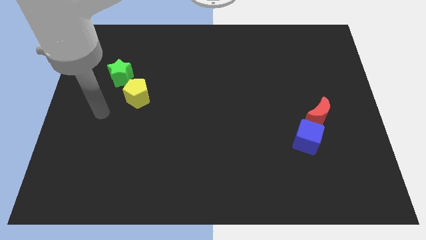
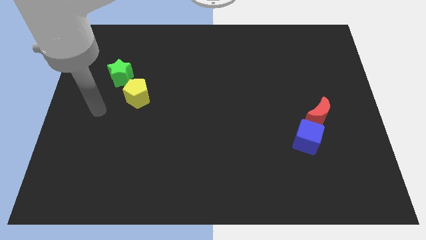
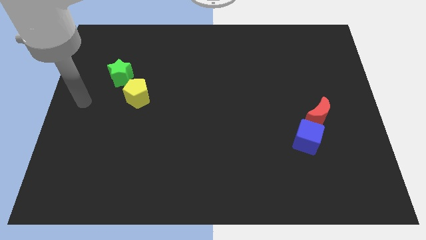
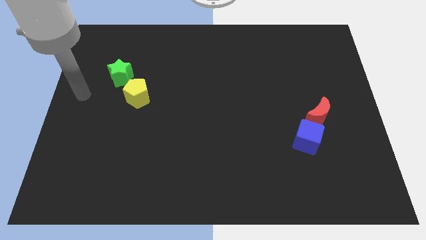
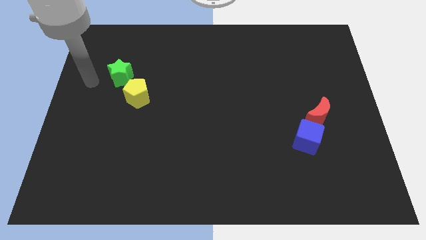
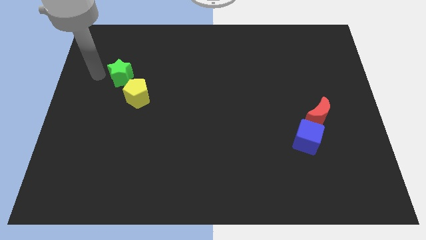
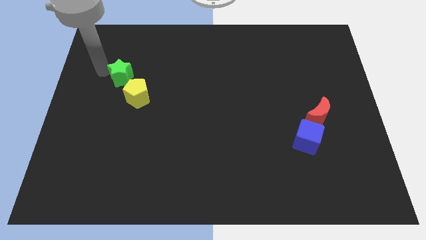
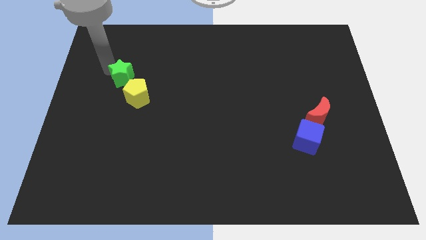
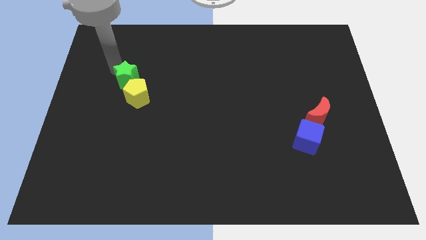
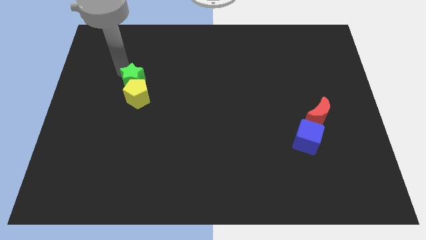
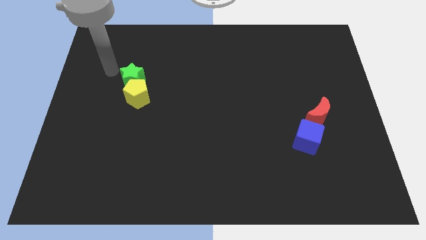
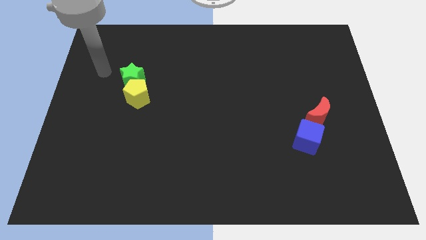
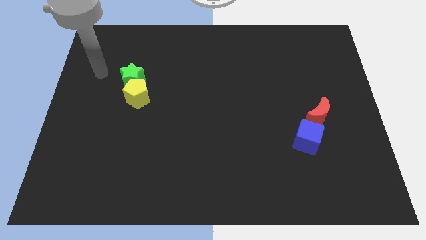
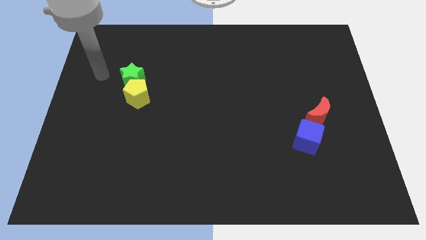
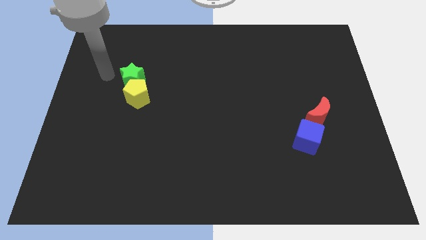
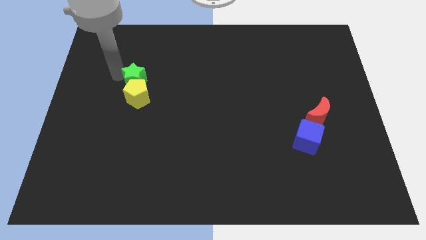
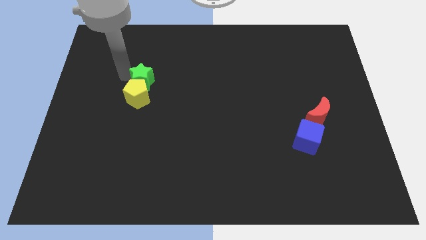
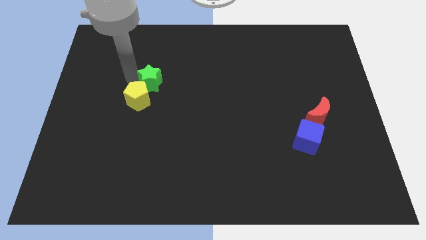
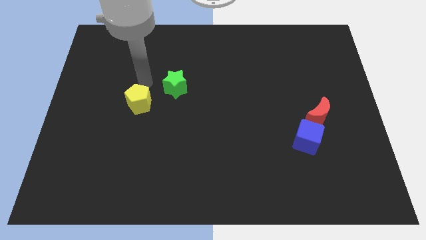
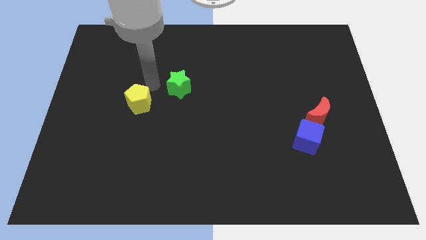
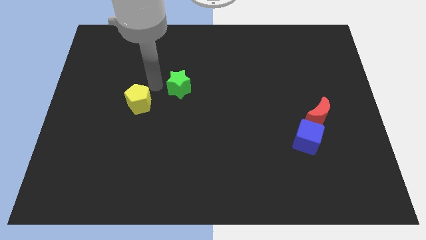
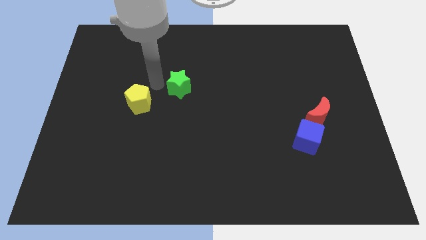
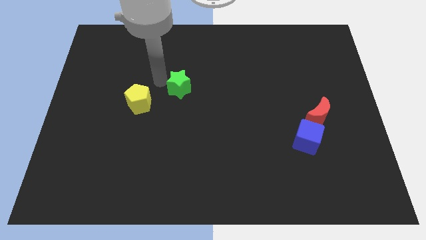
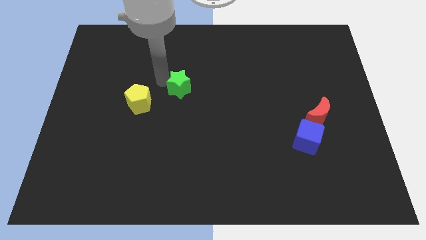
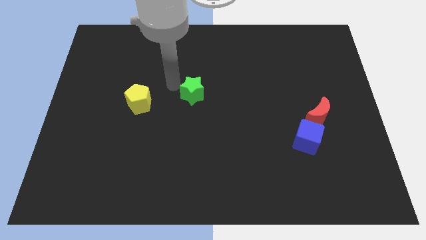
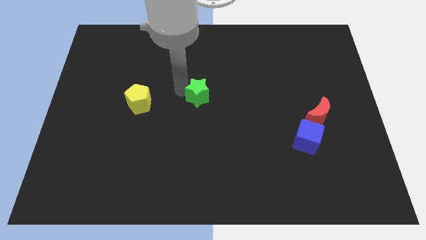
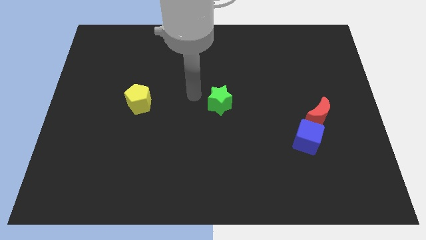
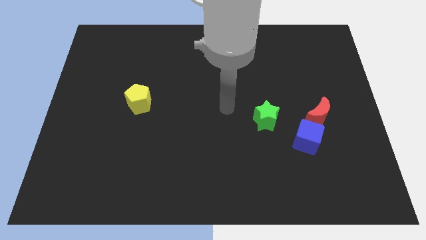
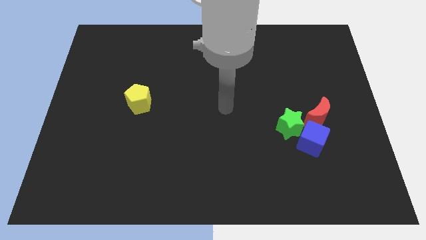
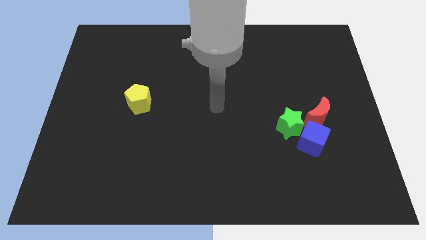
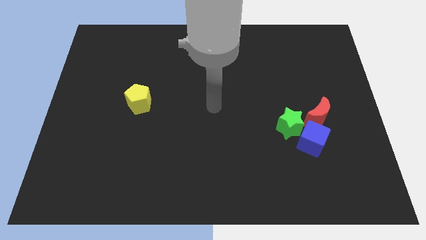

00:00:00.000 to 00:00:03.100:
put the star close to the blue block

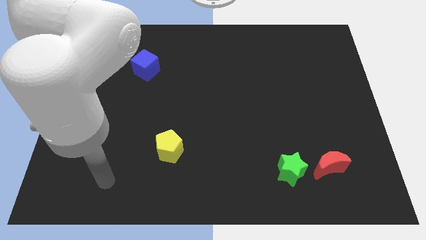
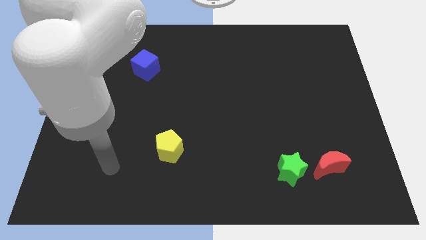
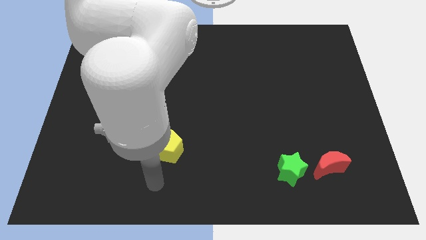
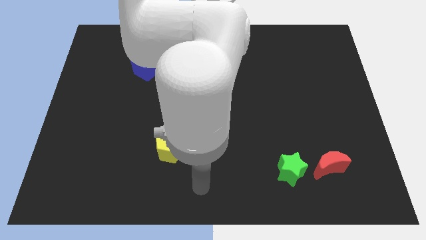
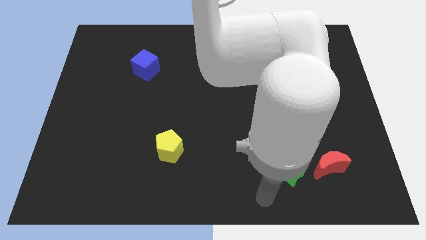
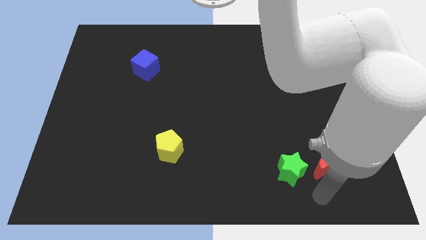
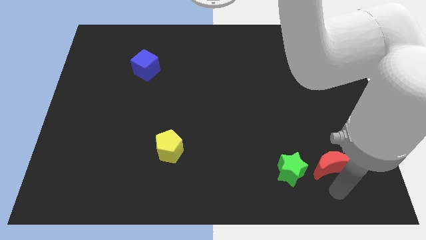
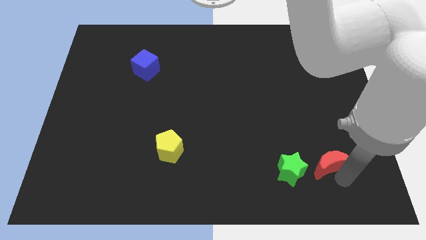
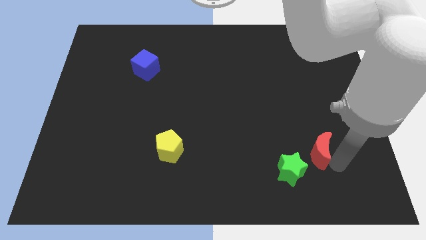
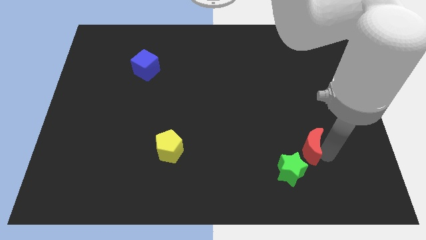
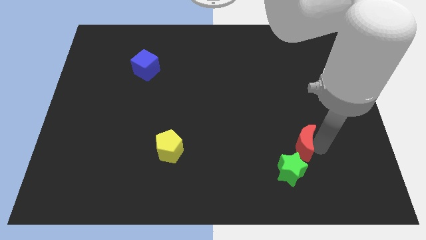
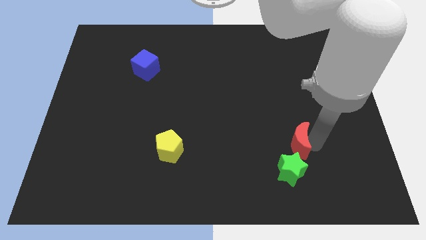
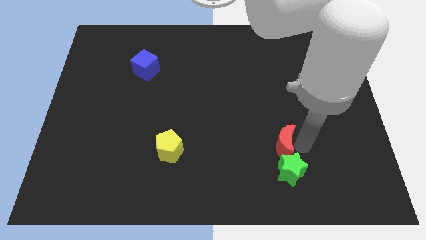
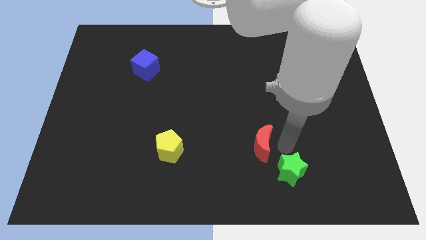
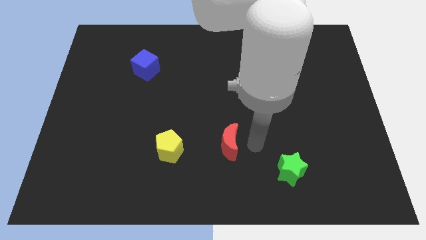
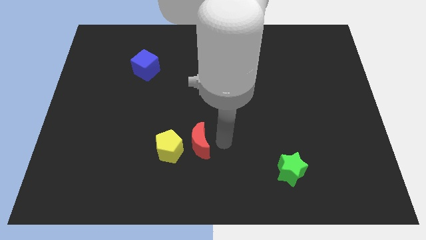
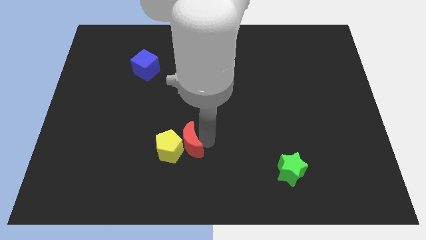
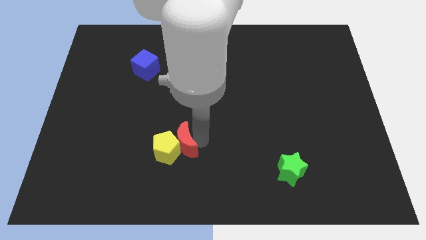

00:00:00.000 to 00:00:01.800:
push the red moon next to the pentagon

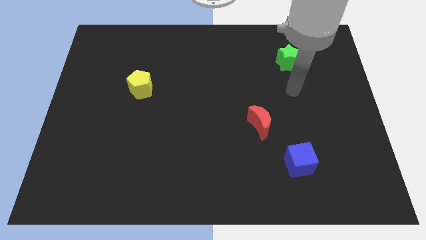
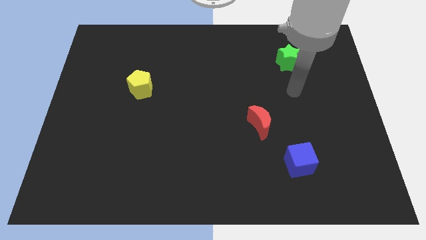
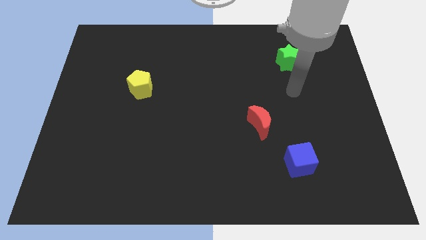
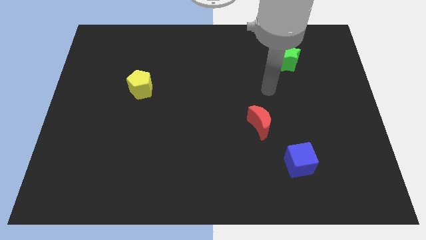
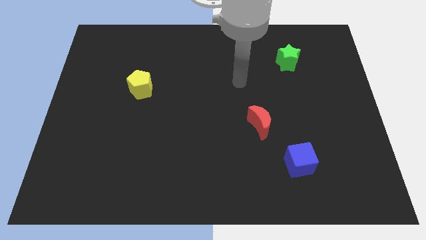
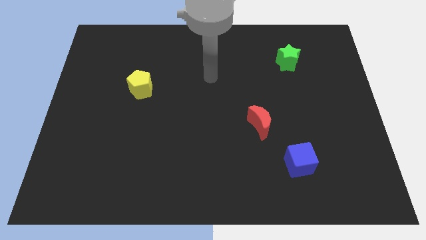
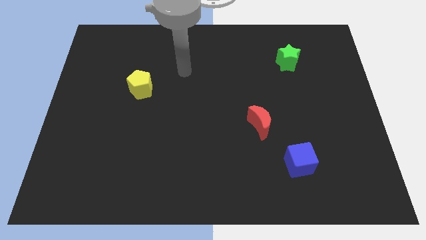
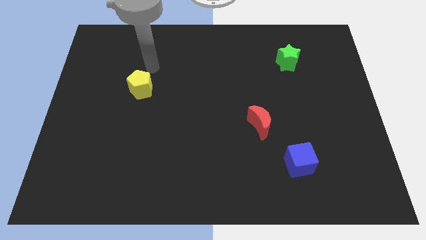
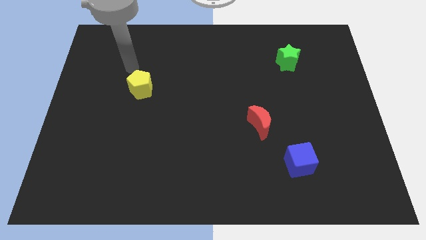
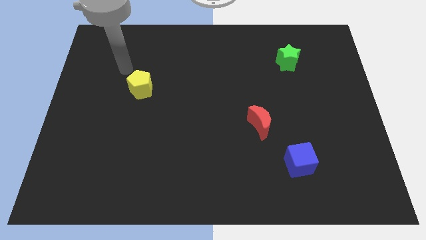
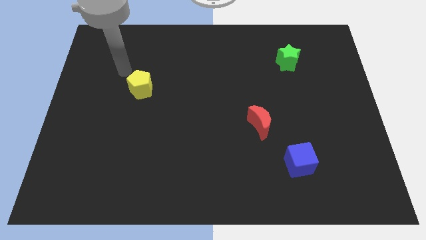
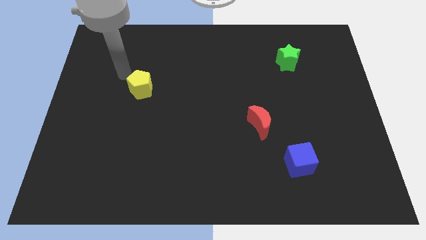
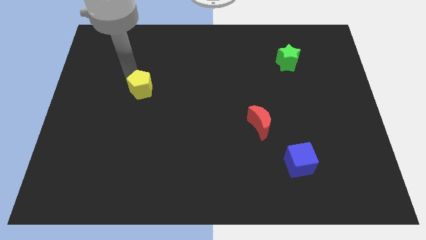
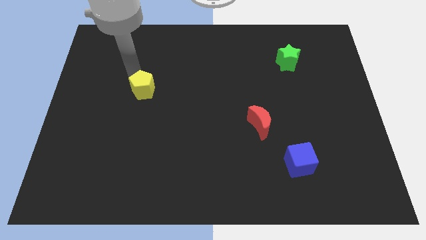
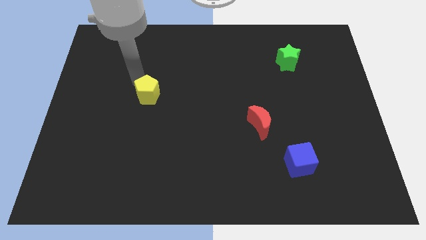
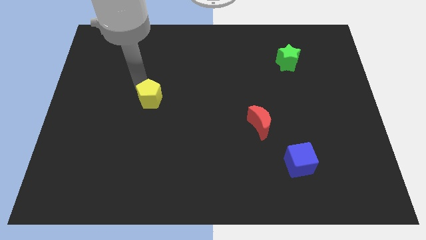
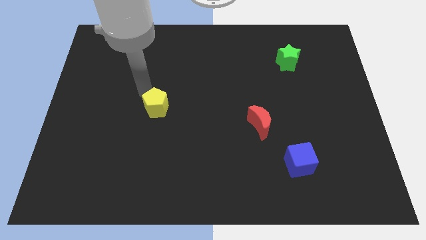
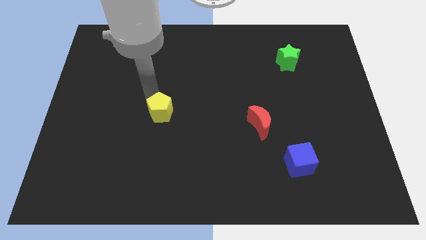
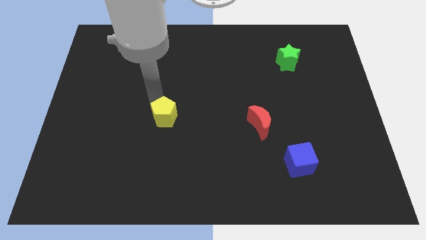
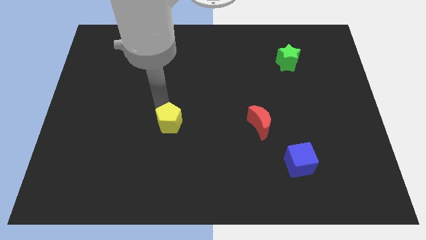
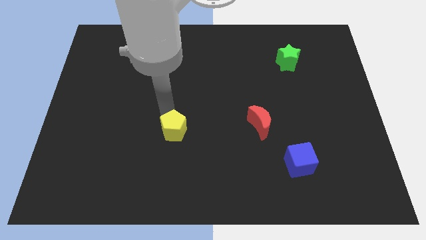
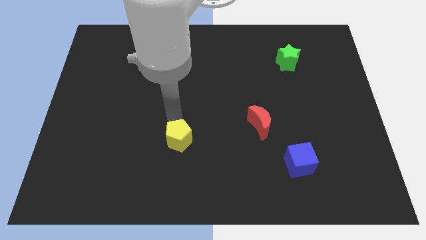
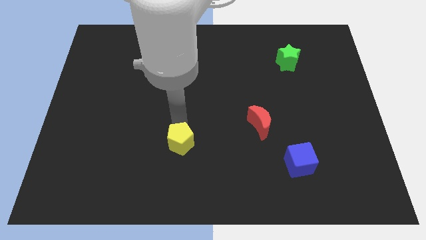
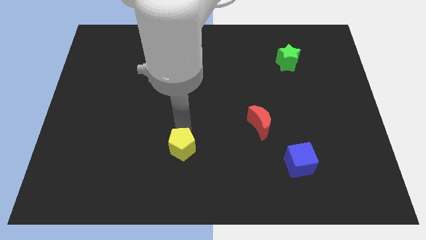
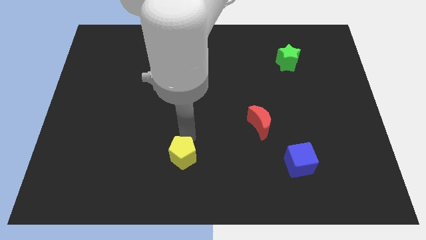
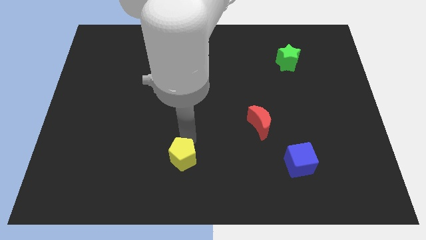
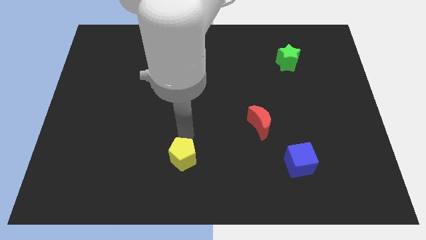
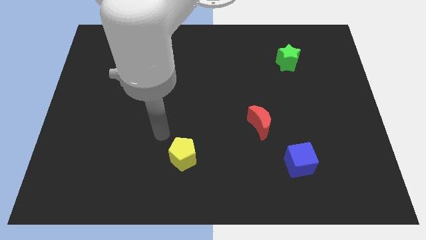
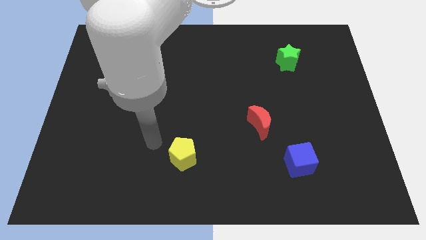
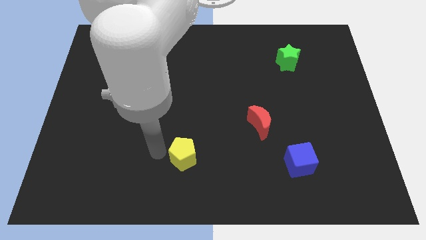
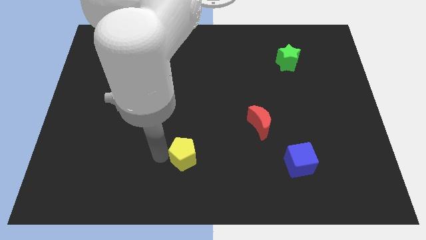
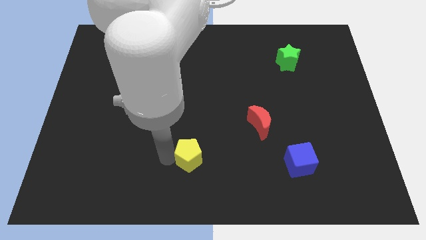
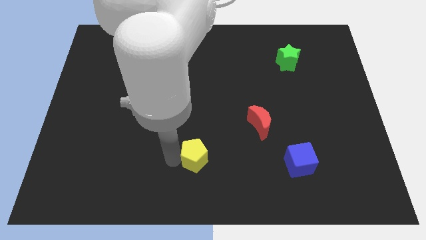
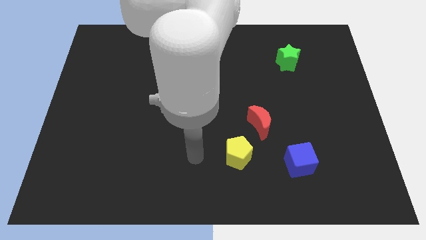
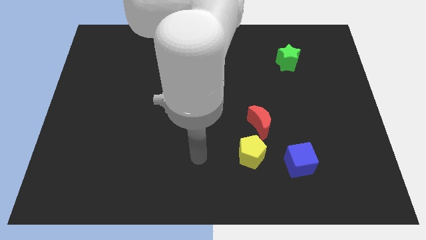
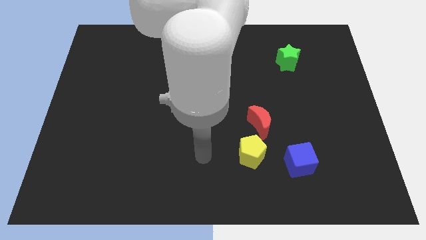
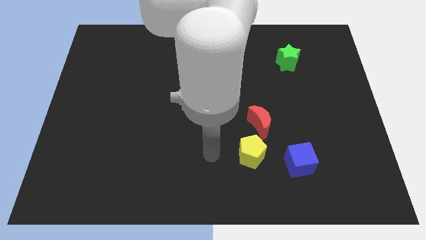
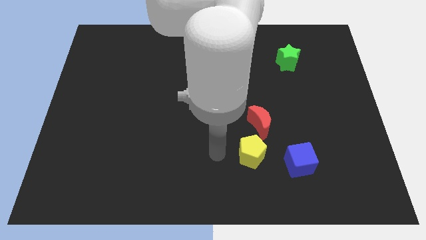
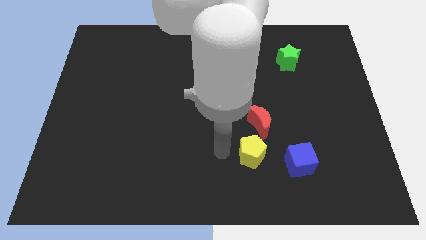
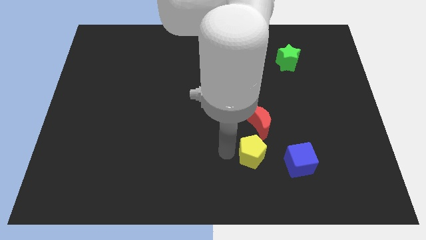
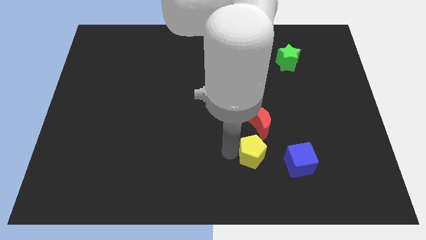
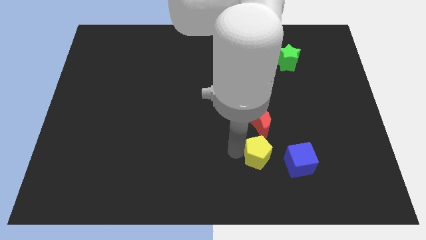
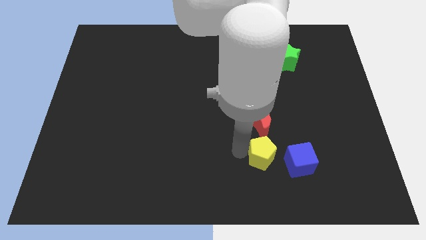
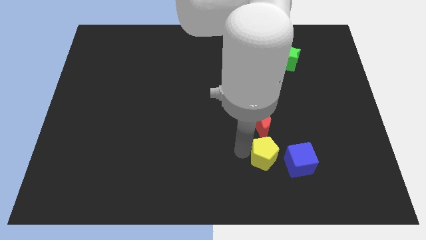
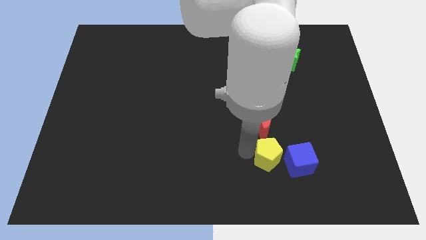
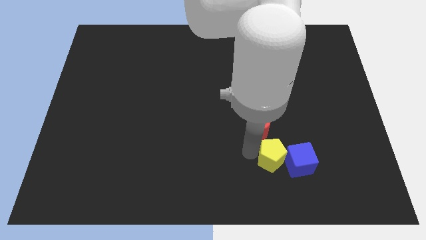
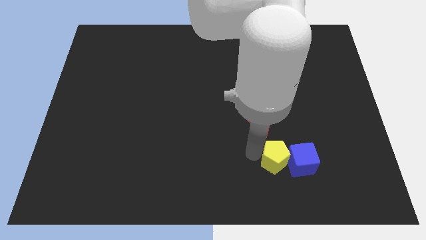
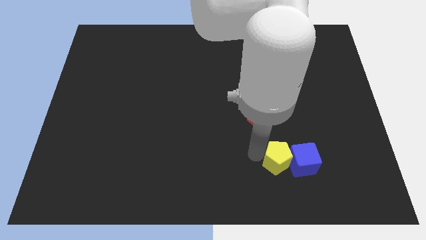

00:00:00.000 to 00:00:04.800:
push the yellow pentagon close to the cube
